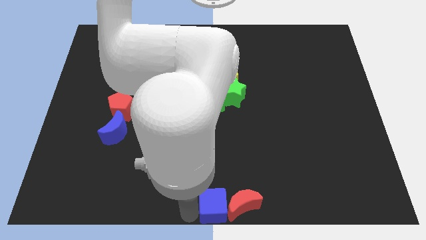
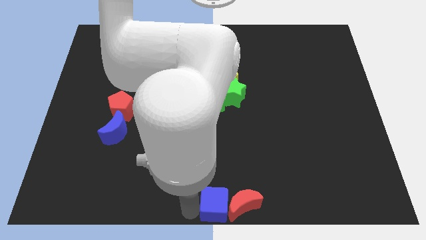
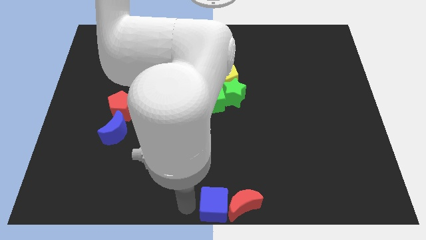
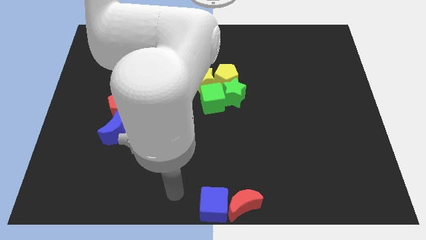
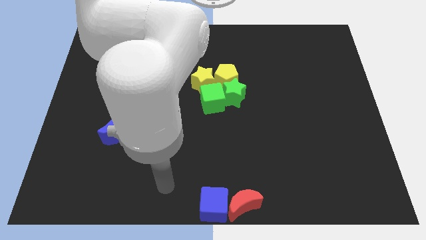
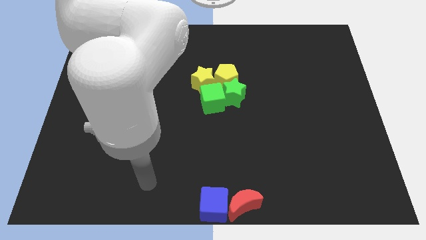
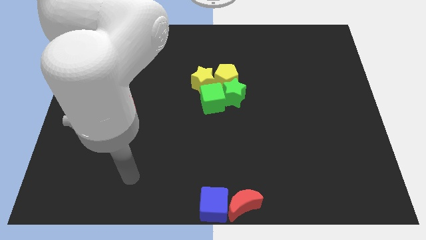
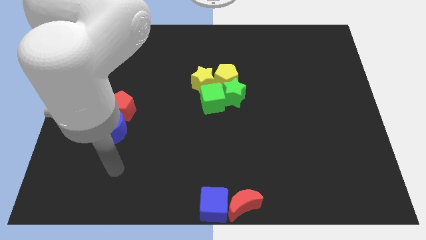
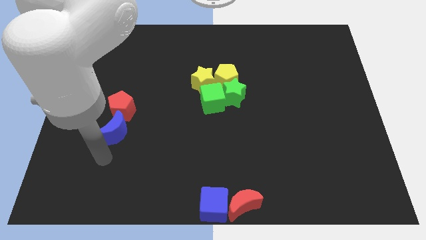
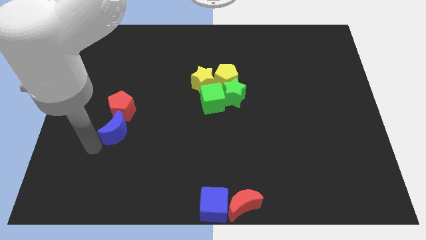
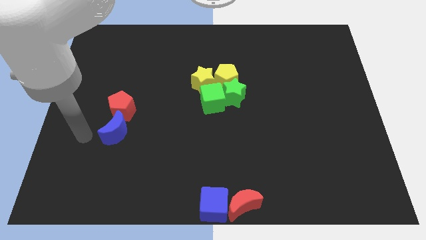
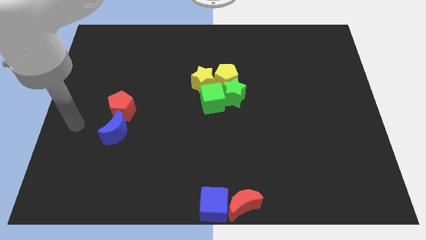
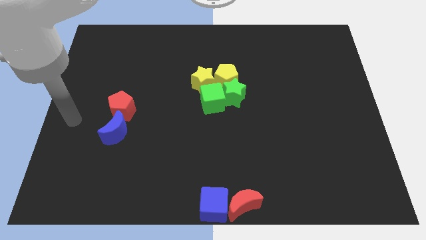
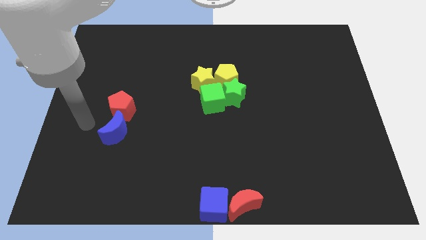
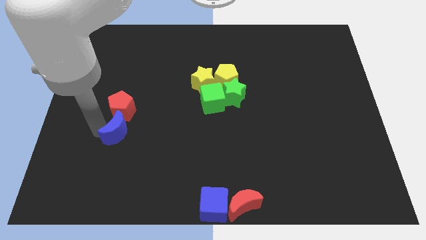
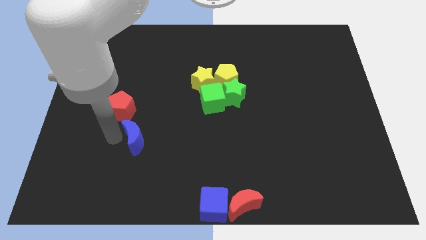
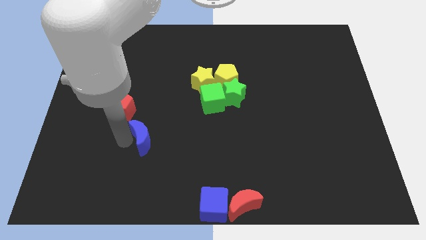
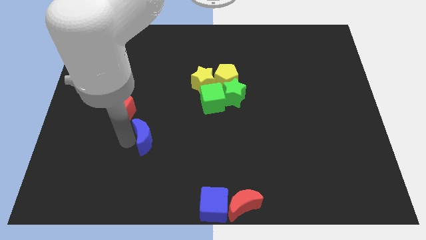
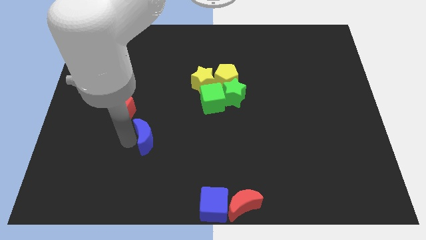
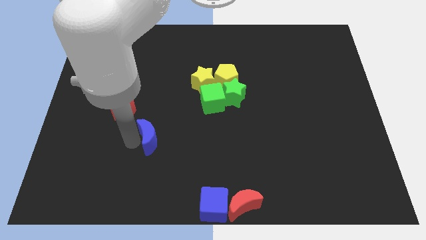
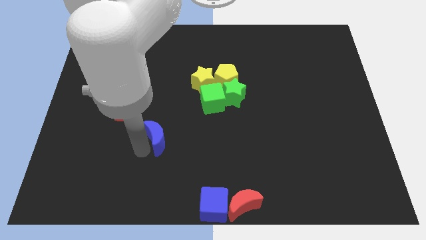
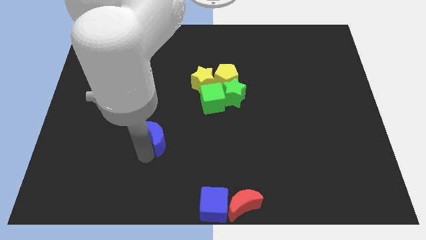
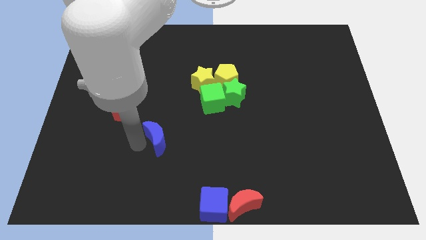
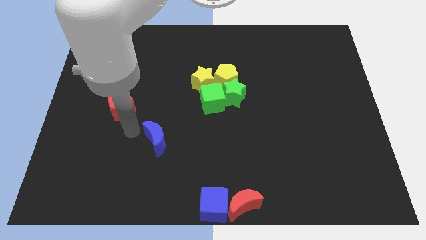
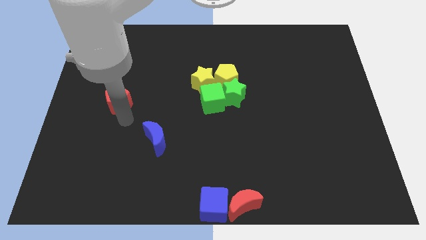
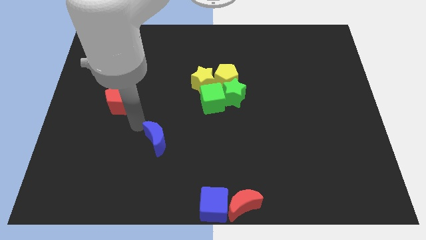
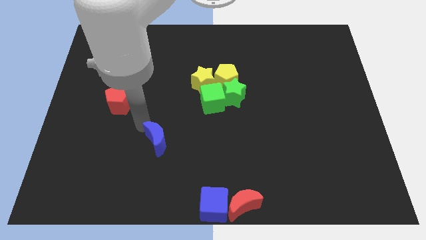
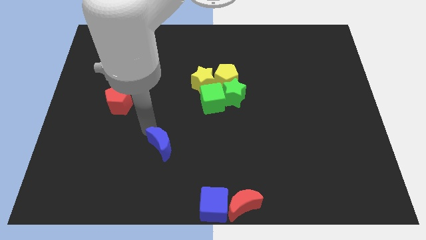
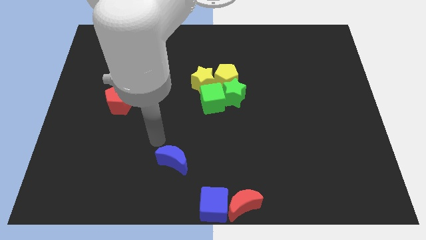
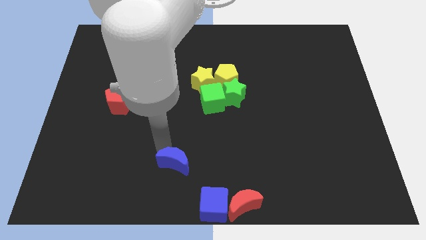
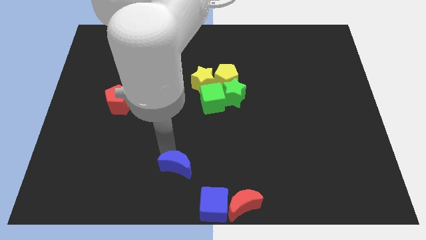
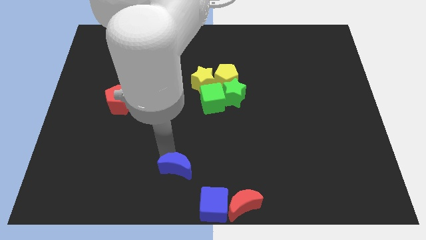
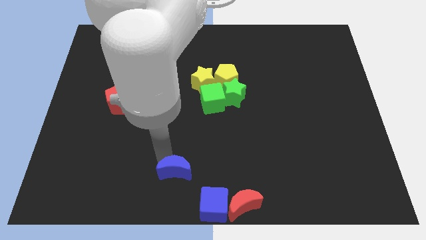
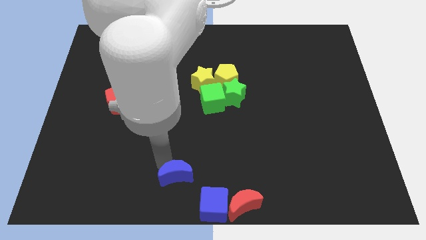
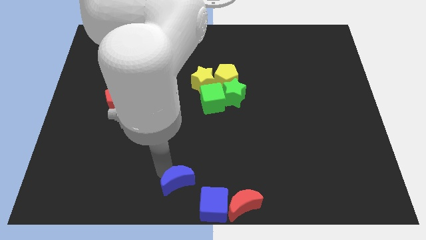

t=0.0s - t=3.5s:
separate the blue crescent from the red pentagon

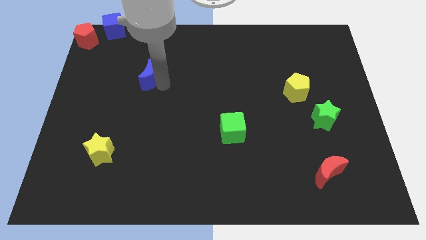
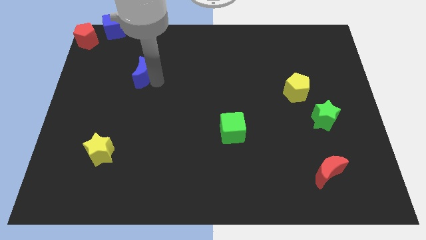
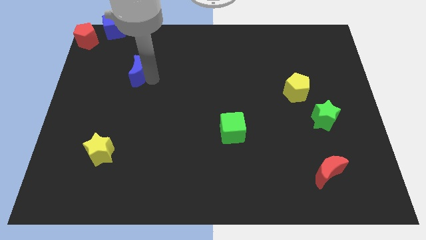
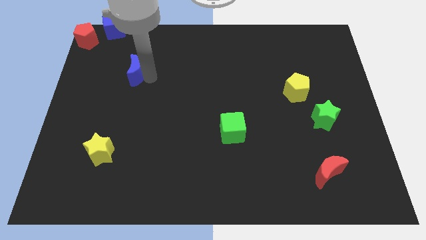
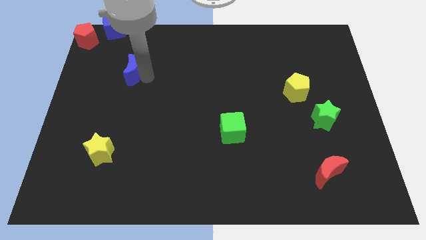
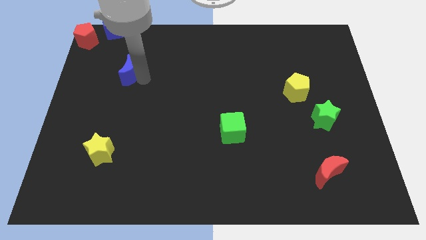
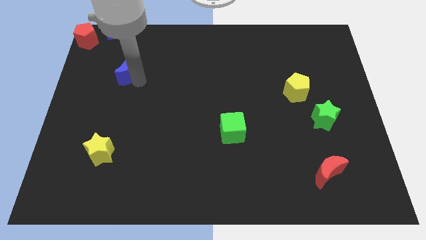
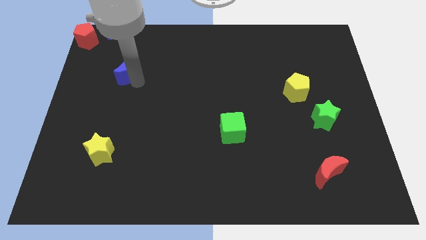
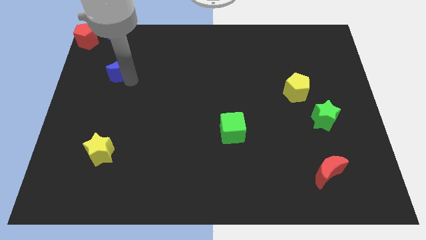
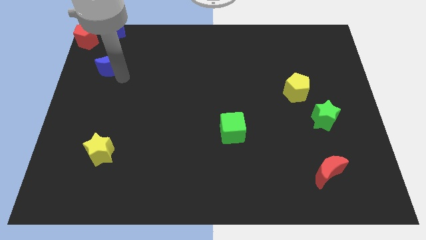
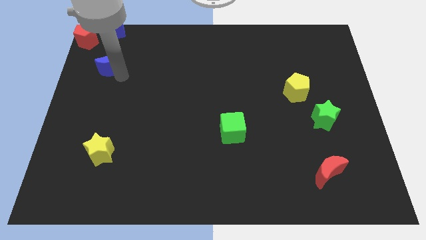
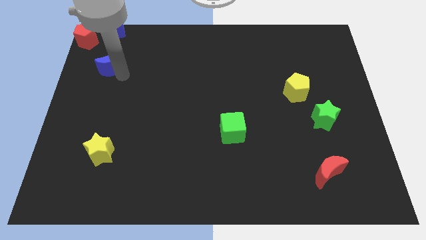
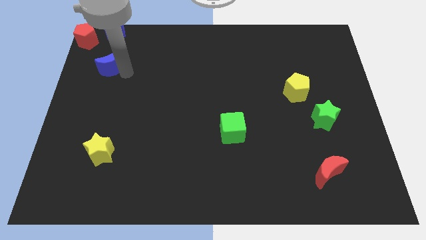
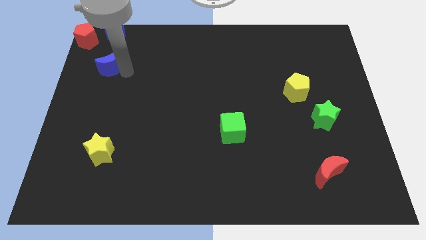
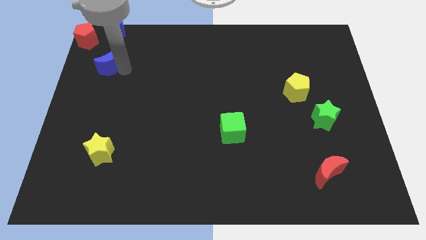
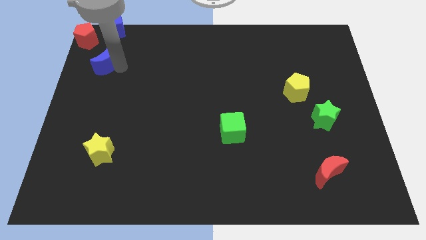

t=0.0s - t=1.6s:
move blue moon towards red pentagon

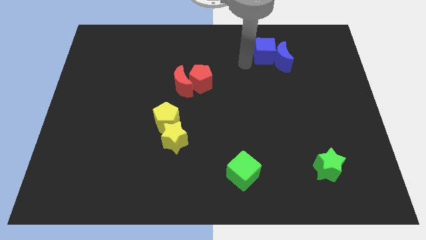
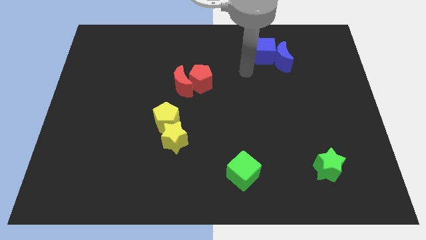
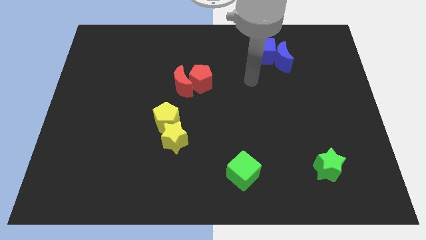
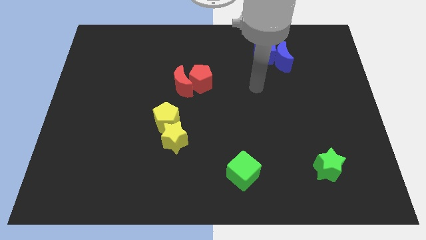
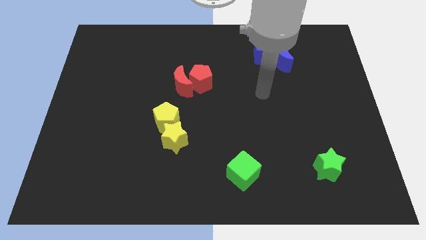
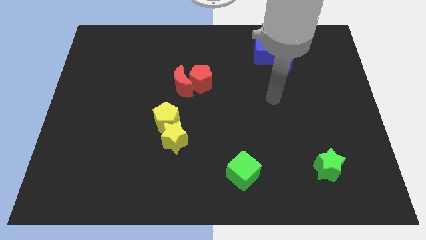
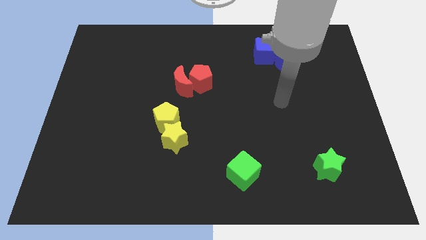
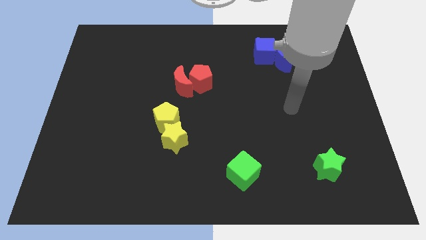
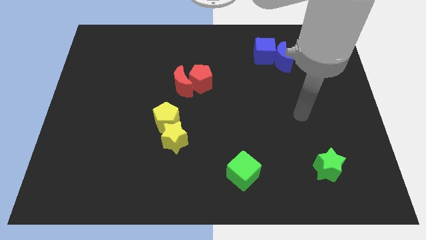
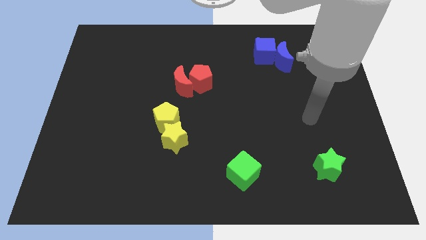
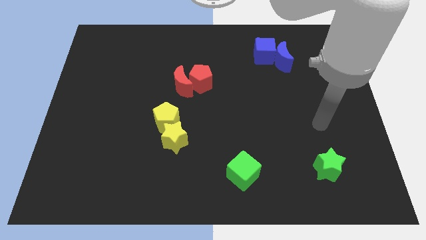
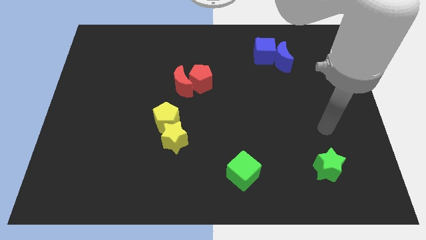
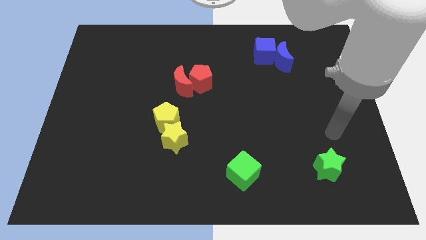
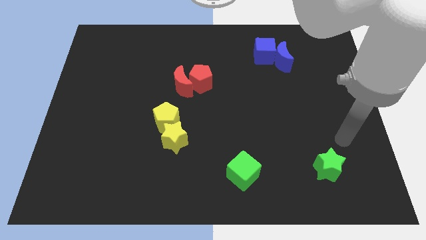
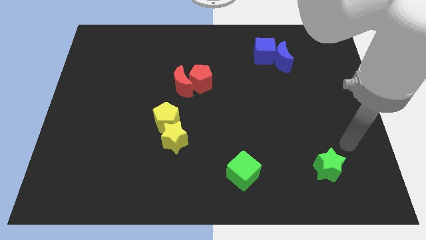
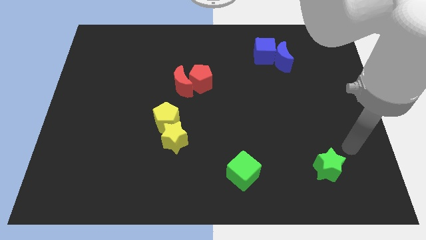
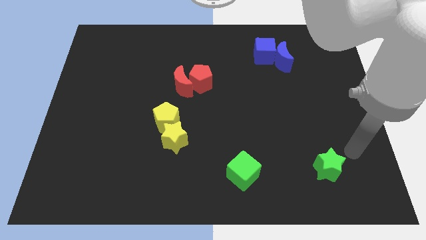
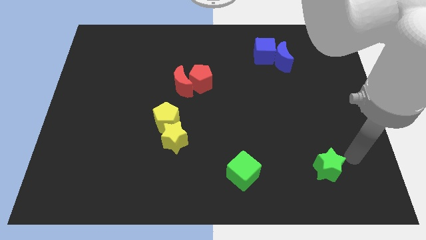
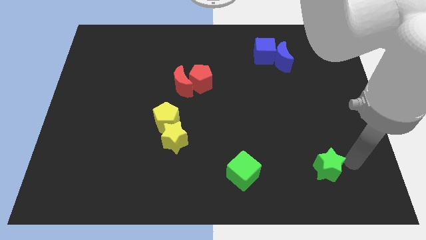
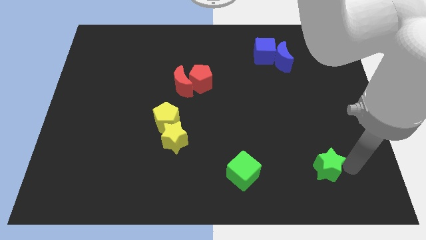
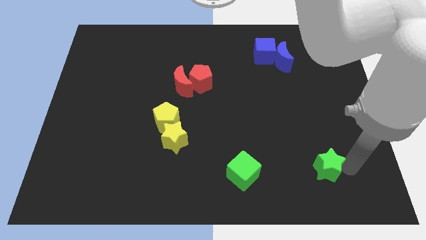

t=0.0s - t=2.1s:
move your arm towards the green star

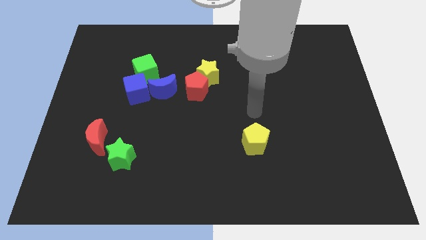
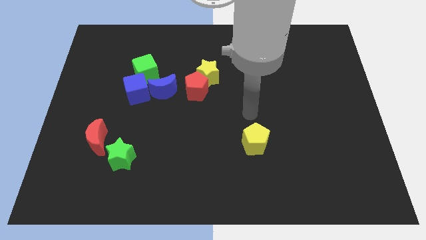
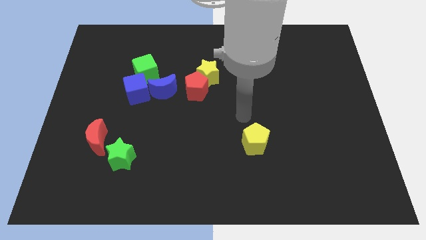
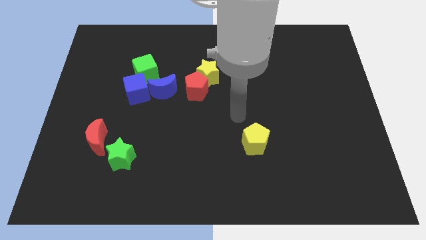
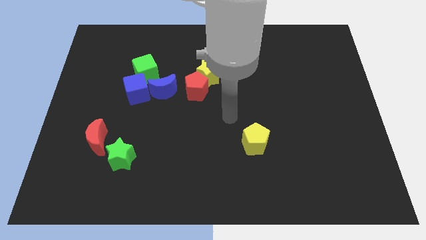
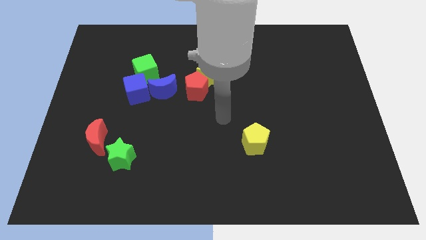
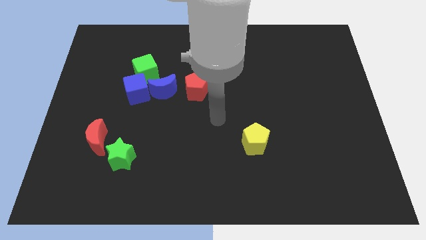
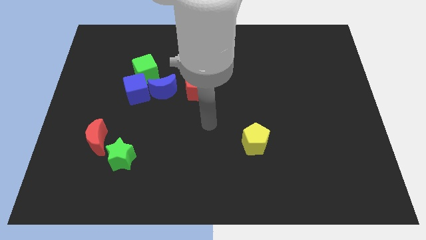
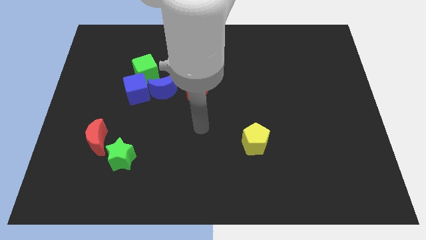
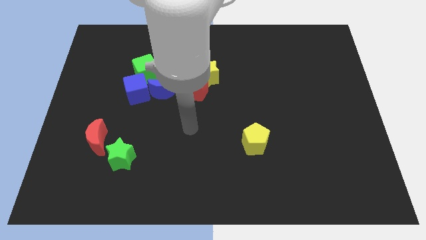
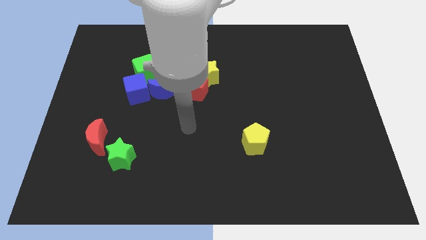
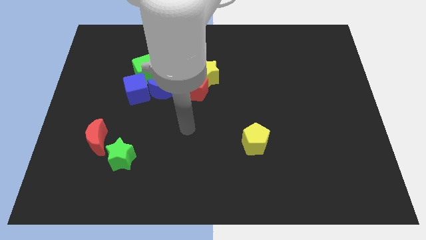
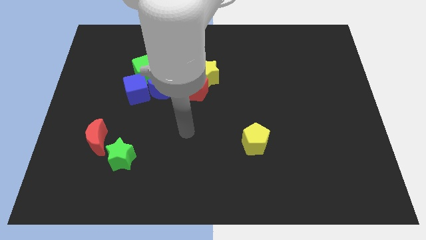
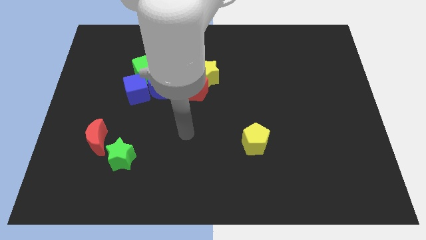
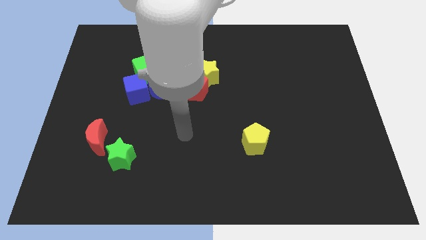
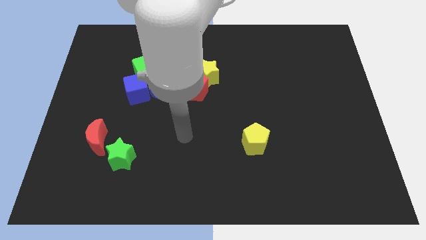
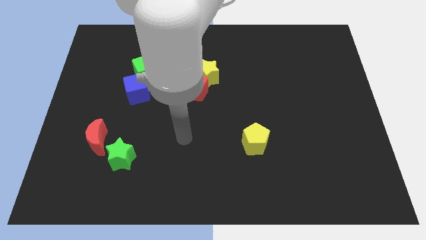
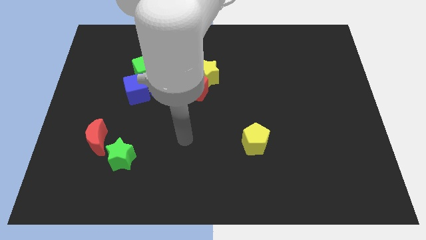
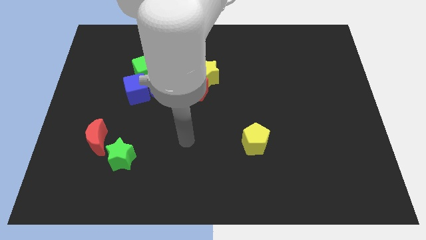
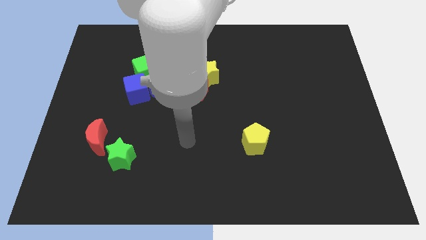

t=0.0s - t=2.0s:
move the arm towards the down of the board

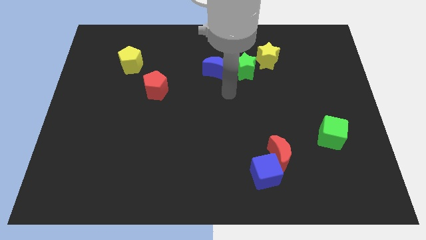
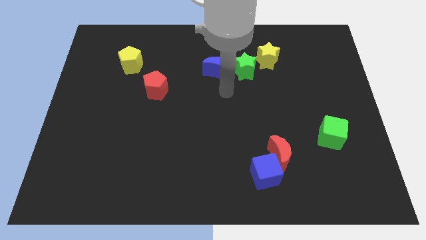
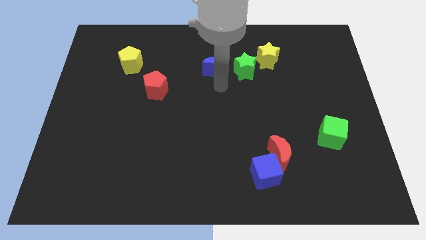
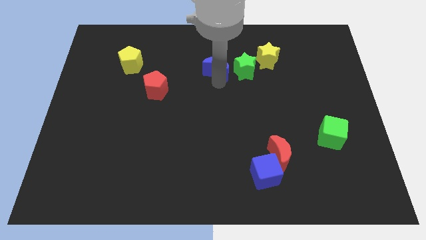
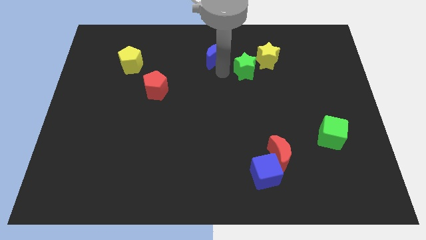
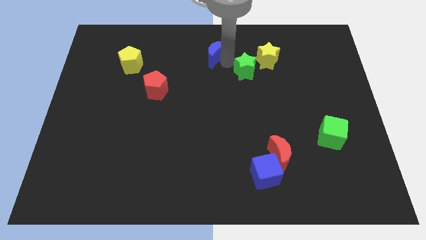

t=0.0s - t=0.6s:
push blue moon upwards
